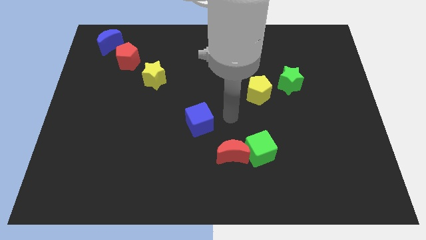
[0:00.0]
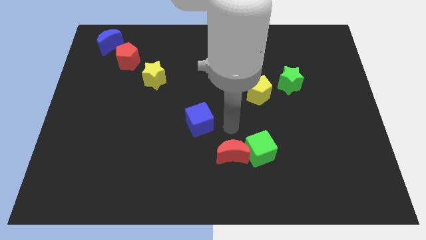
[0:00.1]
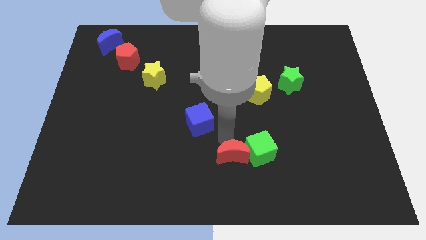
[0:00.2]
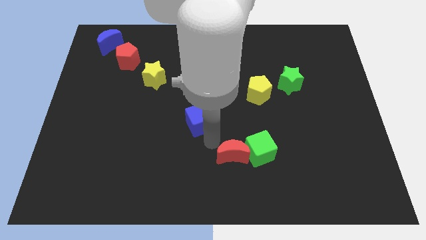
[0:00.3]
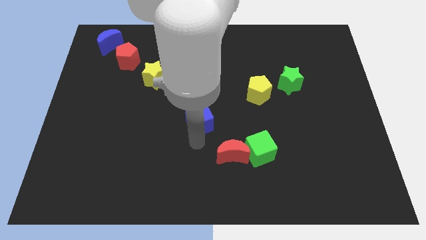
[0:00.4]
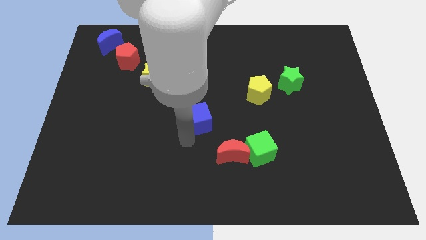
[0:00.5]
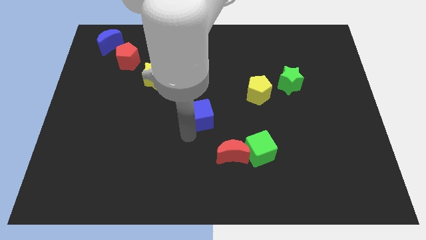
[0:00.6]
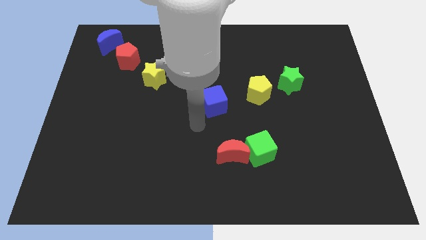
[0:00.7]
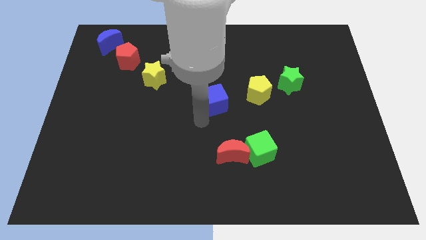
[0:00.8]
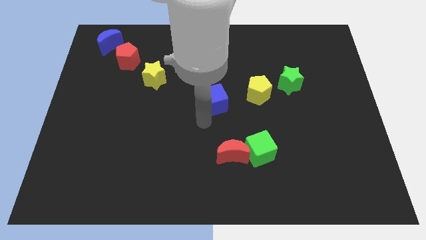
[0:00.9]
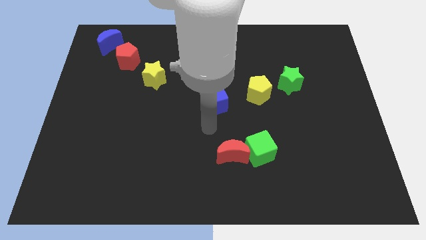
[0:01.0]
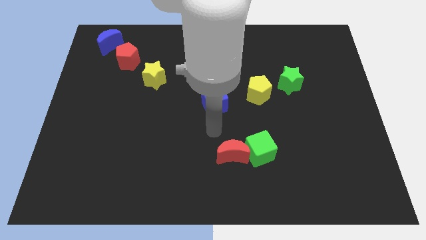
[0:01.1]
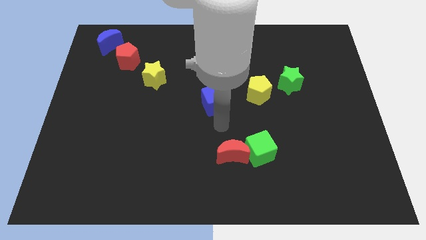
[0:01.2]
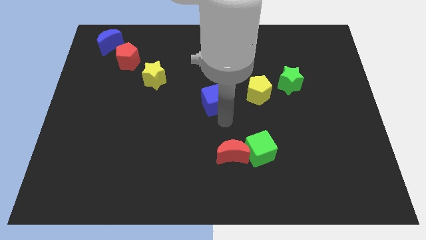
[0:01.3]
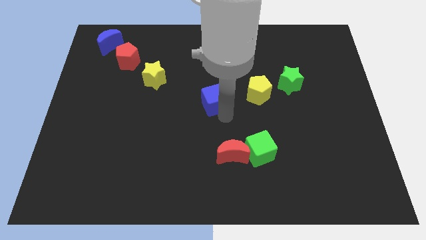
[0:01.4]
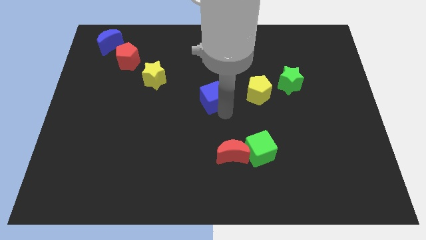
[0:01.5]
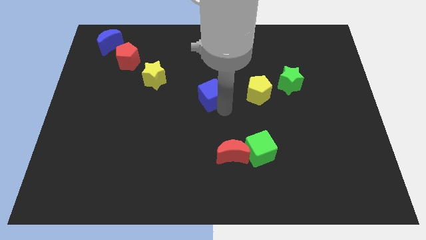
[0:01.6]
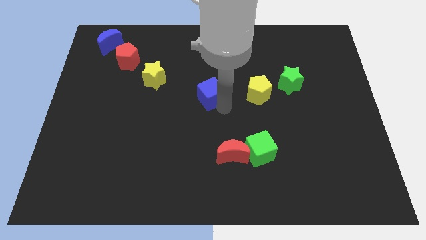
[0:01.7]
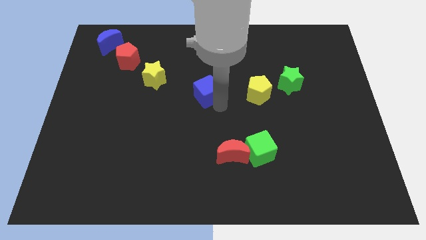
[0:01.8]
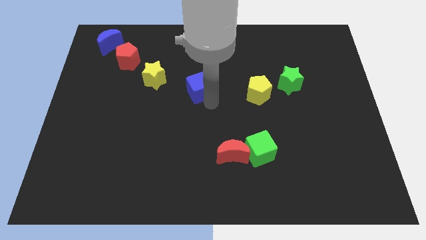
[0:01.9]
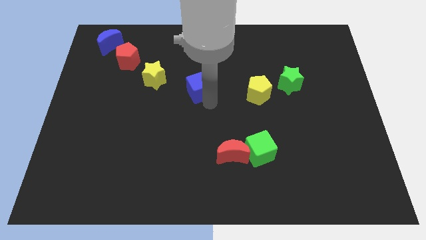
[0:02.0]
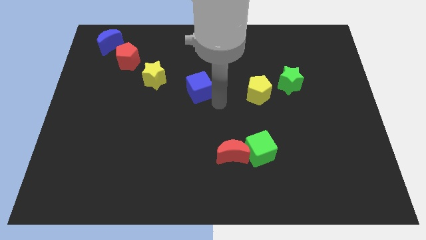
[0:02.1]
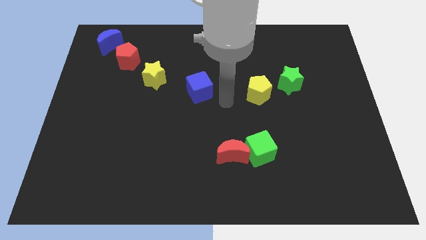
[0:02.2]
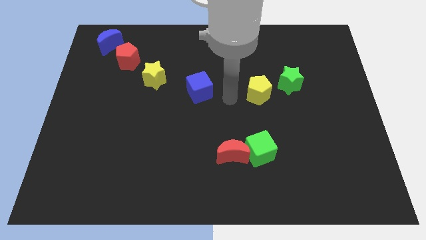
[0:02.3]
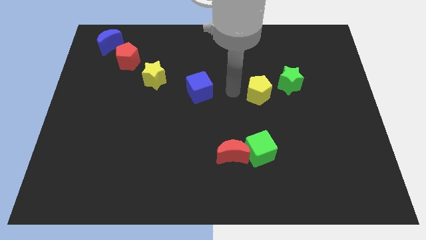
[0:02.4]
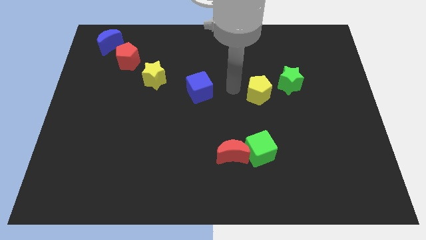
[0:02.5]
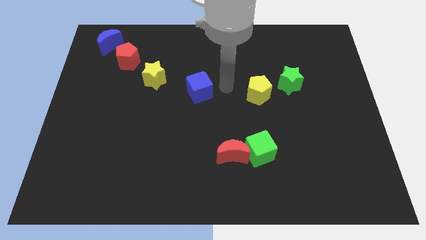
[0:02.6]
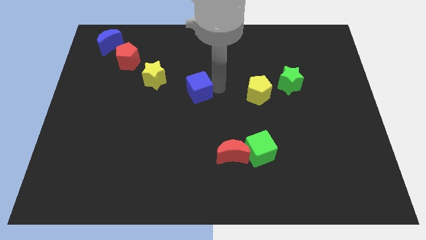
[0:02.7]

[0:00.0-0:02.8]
place the blue cube at center of the board

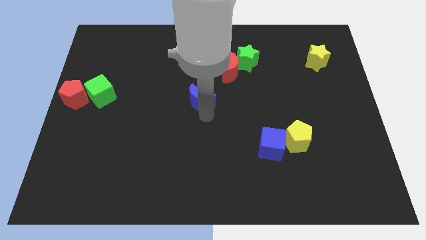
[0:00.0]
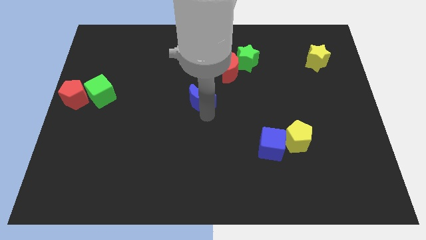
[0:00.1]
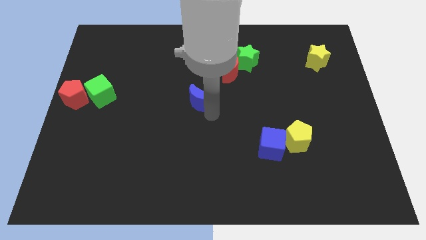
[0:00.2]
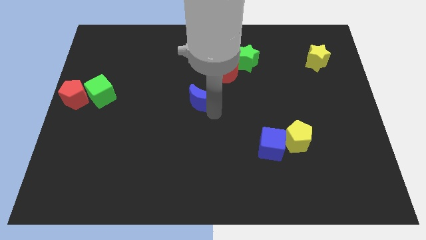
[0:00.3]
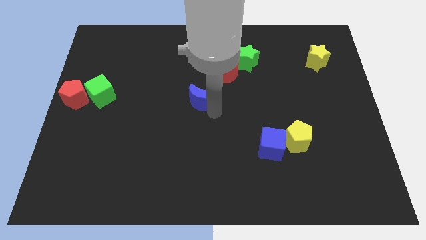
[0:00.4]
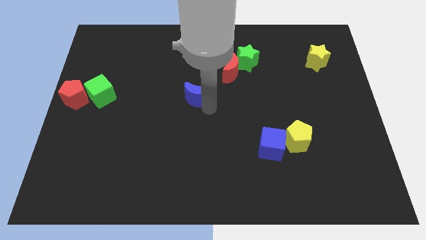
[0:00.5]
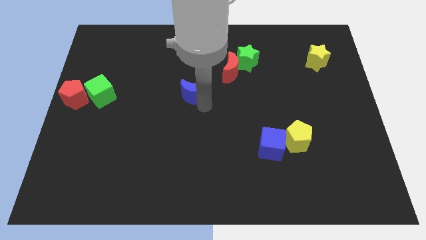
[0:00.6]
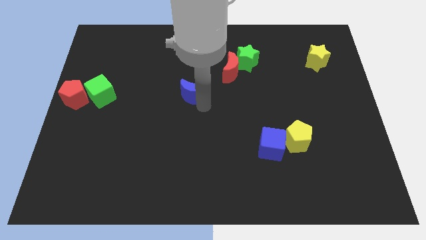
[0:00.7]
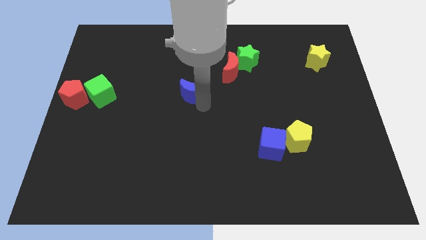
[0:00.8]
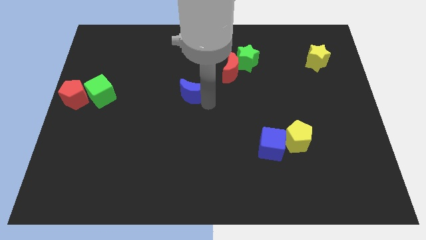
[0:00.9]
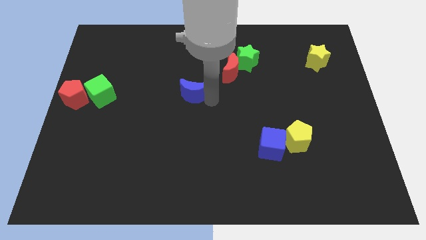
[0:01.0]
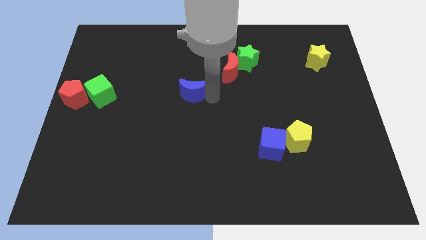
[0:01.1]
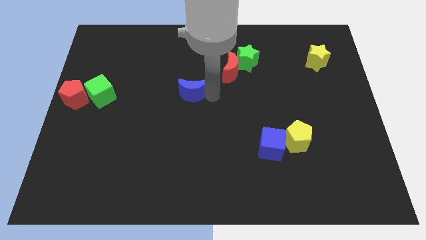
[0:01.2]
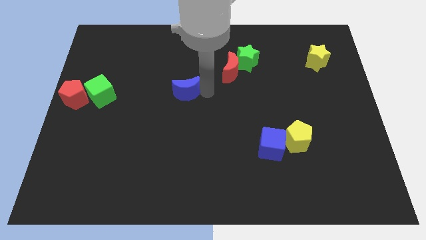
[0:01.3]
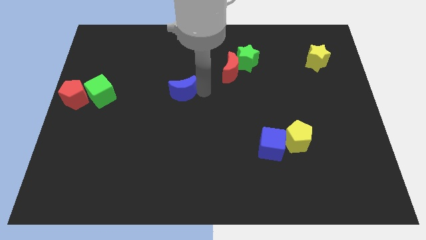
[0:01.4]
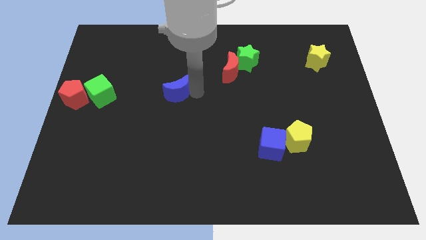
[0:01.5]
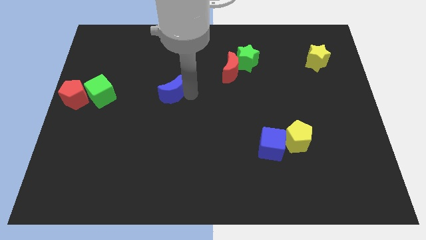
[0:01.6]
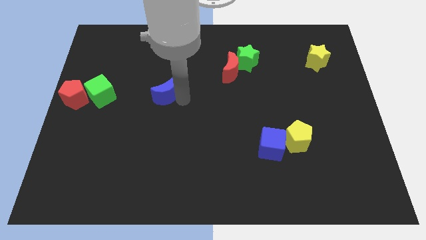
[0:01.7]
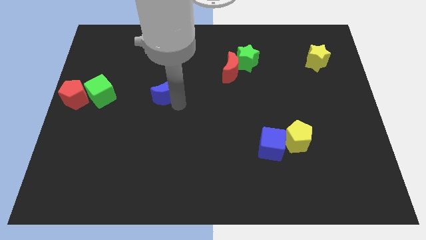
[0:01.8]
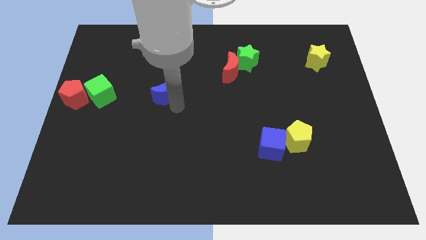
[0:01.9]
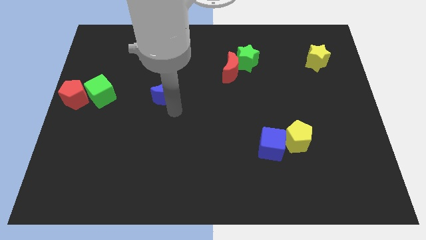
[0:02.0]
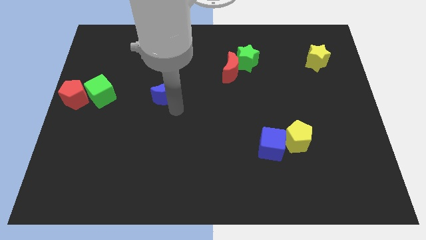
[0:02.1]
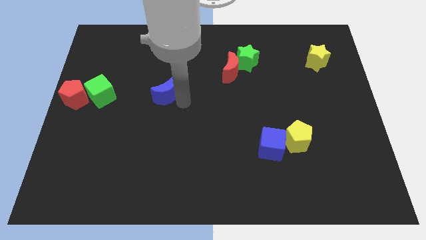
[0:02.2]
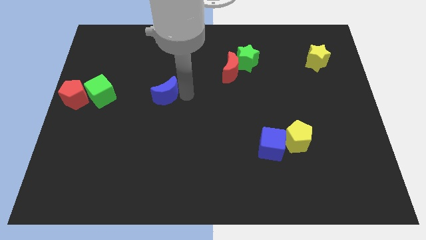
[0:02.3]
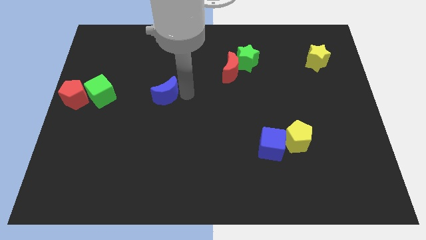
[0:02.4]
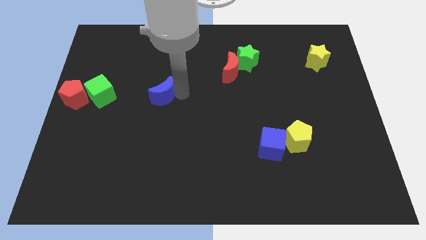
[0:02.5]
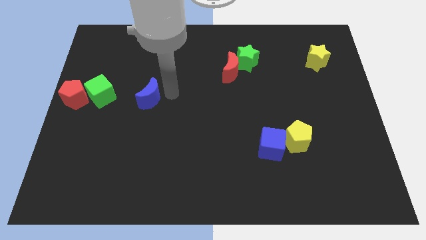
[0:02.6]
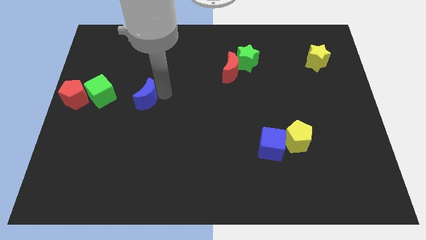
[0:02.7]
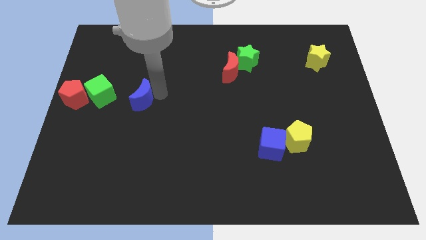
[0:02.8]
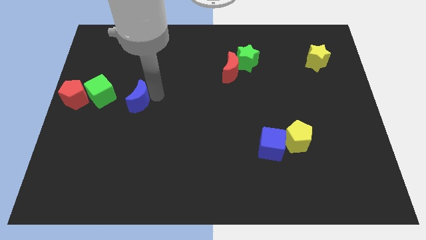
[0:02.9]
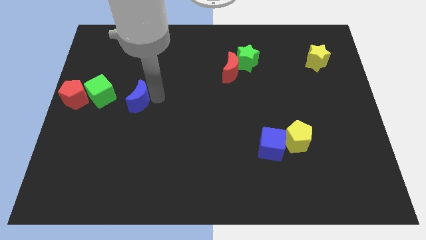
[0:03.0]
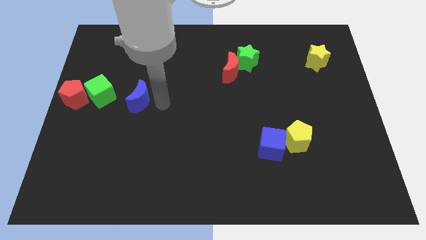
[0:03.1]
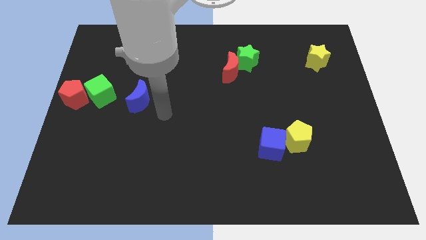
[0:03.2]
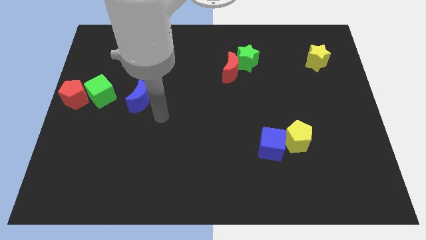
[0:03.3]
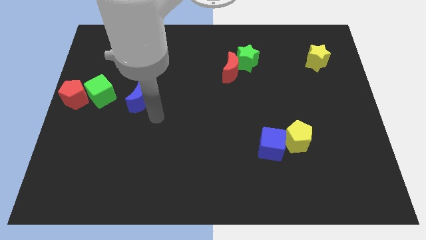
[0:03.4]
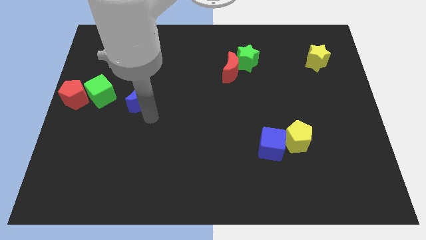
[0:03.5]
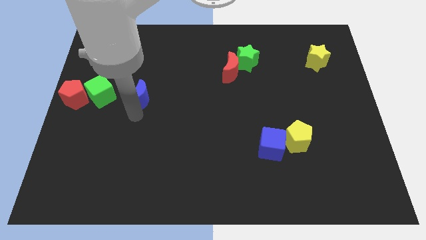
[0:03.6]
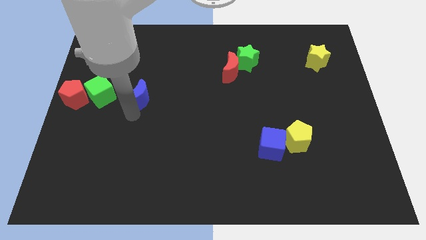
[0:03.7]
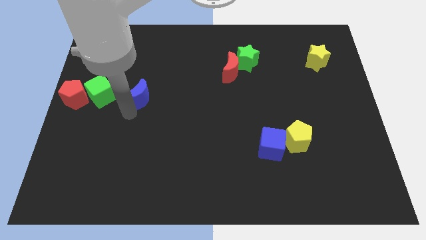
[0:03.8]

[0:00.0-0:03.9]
push the blue crescent close to the green cube

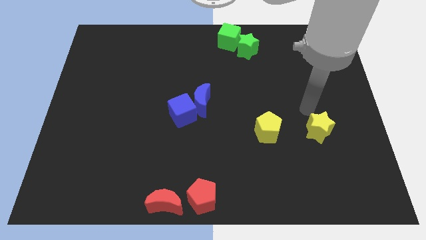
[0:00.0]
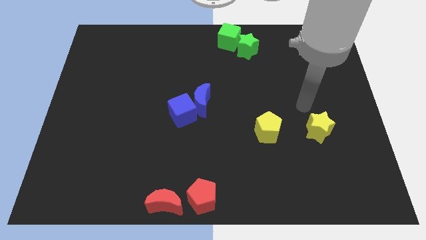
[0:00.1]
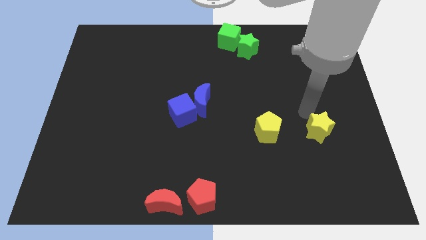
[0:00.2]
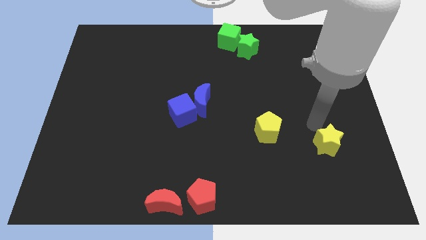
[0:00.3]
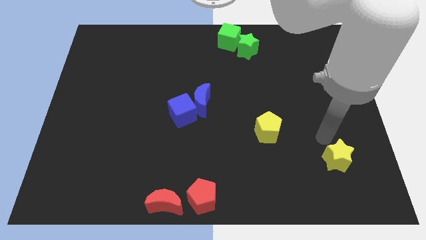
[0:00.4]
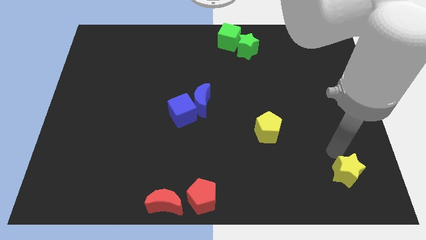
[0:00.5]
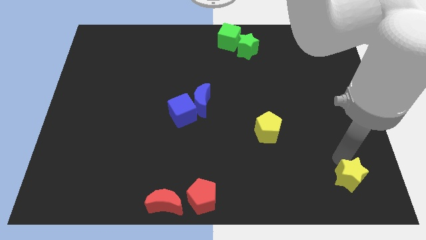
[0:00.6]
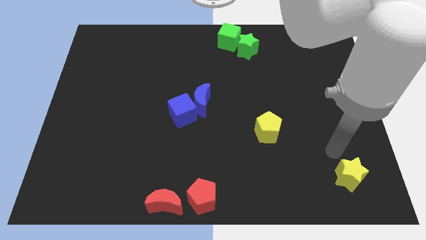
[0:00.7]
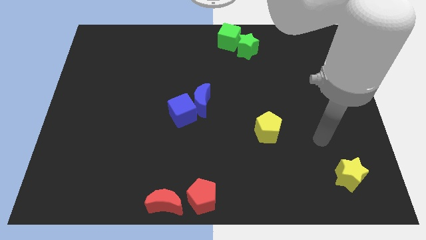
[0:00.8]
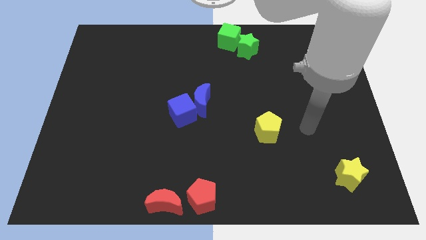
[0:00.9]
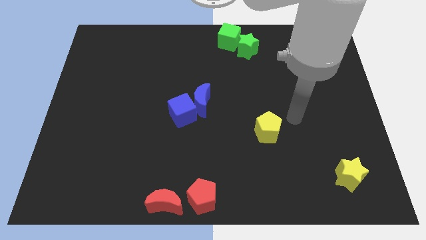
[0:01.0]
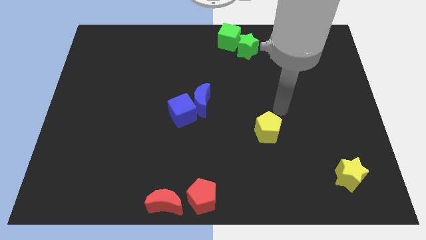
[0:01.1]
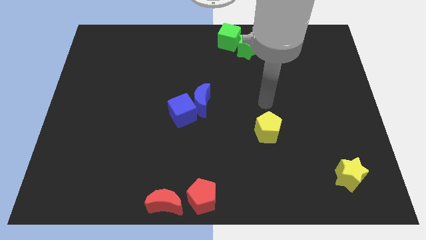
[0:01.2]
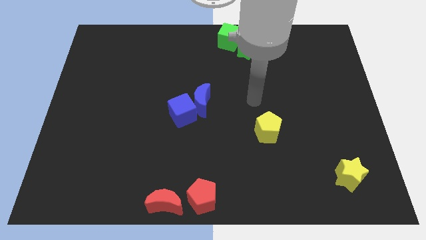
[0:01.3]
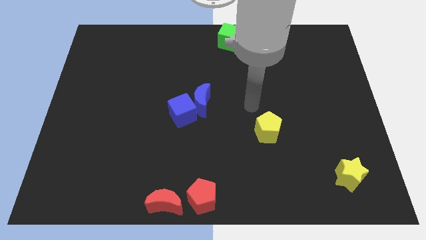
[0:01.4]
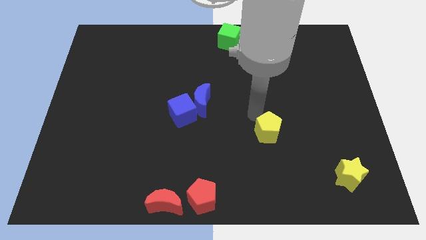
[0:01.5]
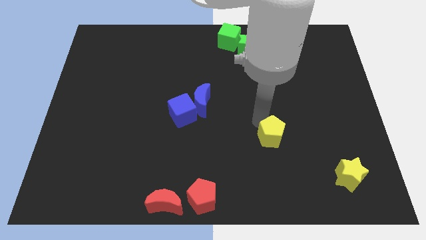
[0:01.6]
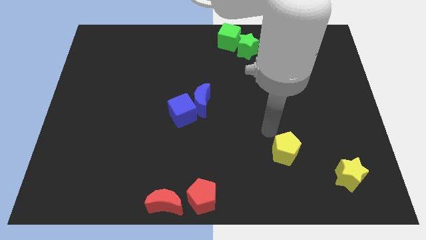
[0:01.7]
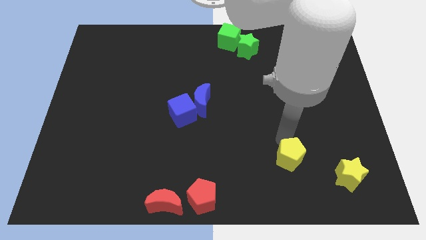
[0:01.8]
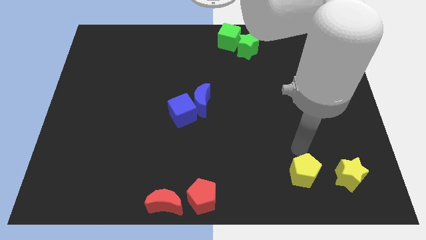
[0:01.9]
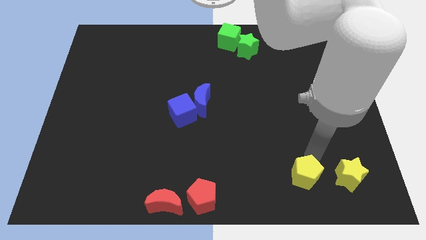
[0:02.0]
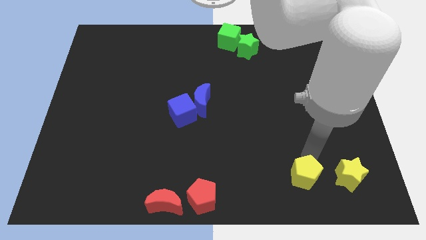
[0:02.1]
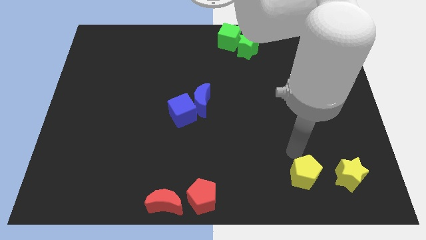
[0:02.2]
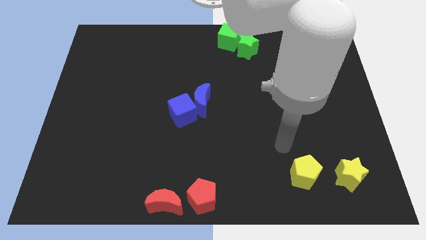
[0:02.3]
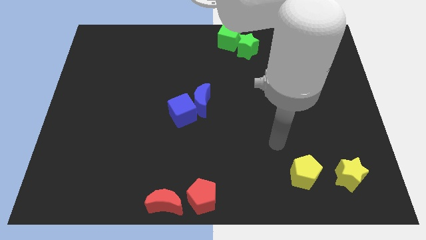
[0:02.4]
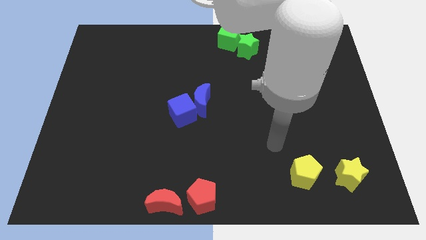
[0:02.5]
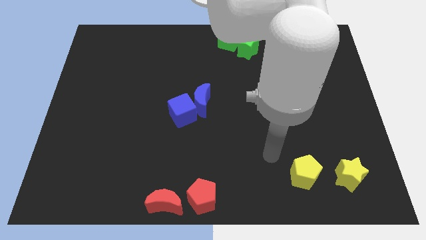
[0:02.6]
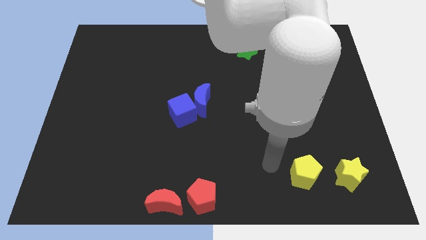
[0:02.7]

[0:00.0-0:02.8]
move the yellow star towards the right bottom
